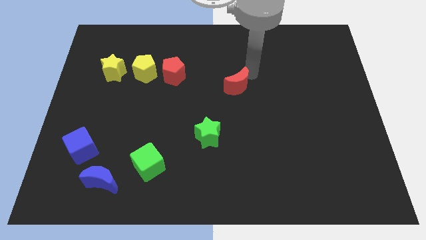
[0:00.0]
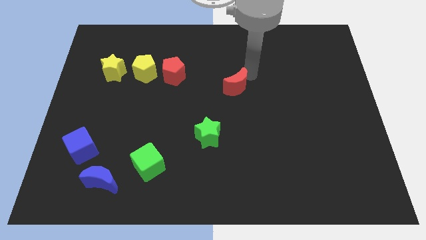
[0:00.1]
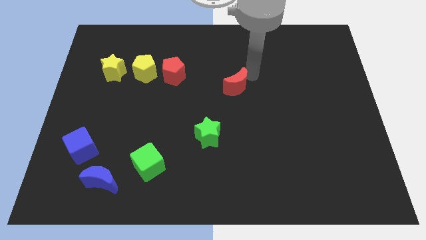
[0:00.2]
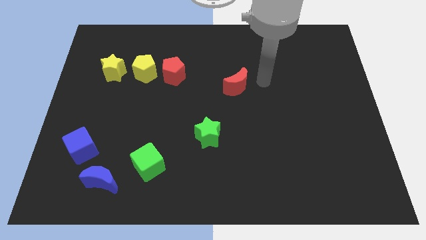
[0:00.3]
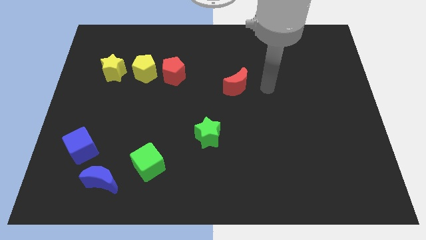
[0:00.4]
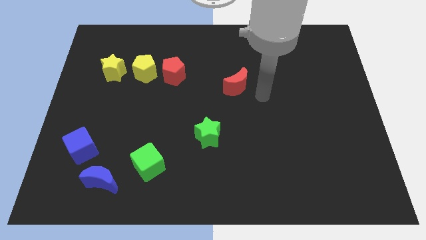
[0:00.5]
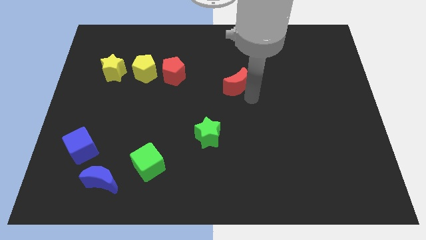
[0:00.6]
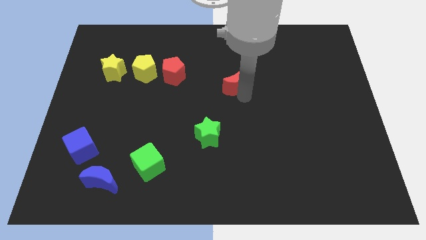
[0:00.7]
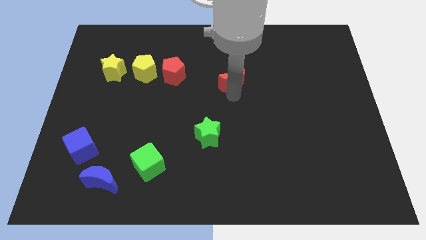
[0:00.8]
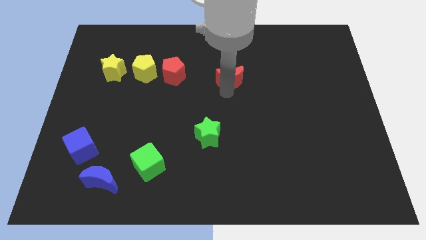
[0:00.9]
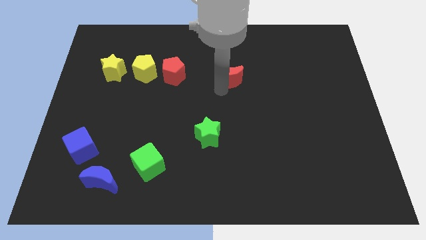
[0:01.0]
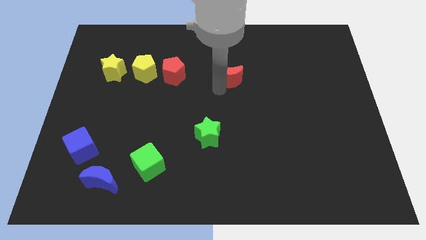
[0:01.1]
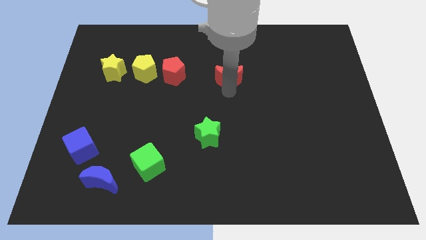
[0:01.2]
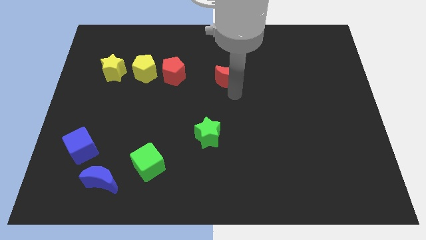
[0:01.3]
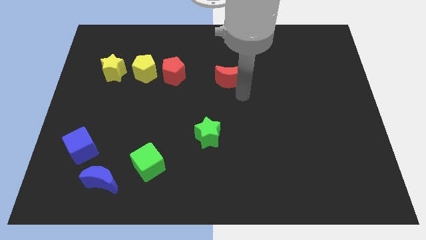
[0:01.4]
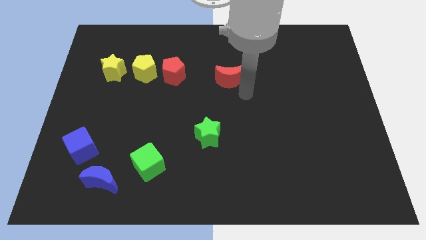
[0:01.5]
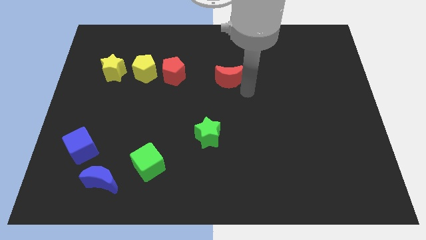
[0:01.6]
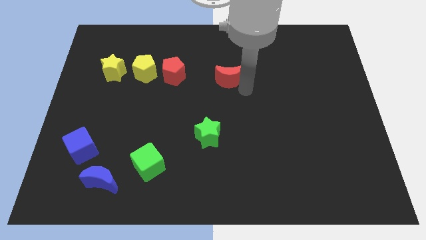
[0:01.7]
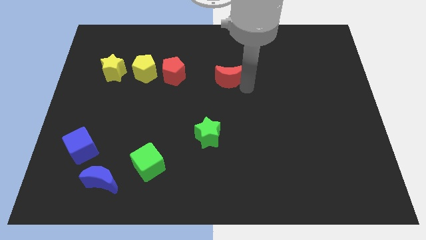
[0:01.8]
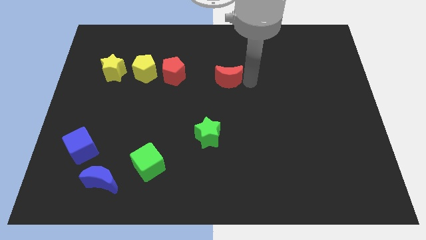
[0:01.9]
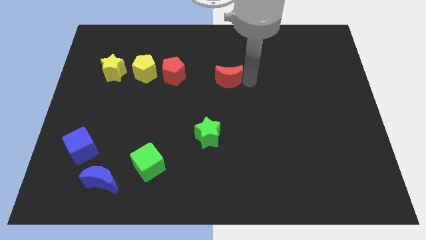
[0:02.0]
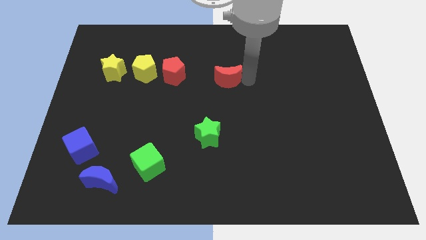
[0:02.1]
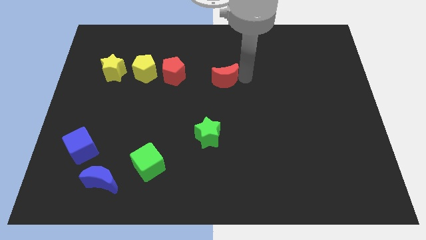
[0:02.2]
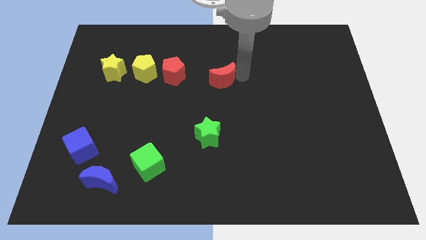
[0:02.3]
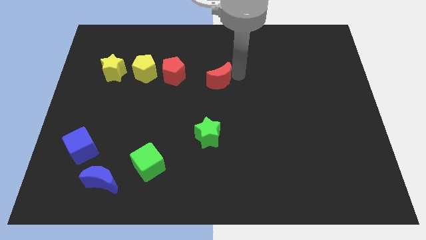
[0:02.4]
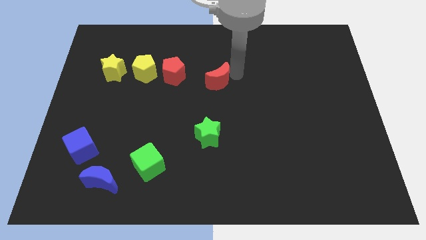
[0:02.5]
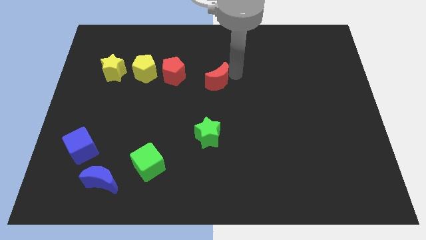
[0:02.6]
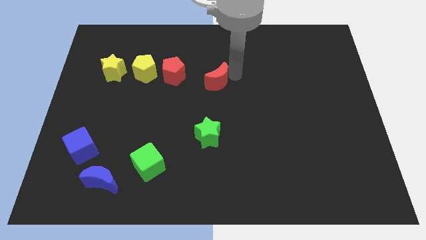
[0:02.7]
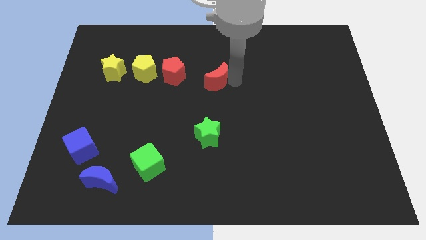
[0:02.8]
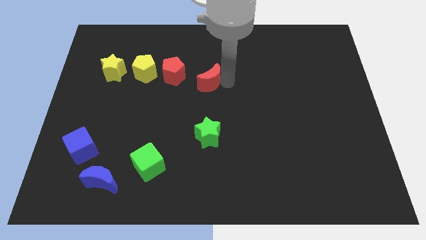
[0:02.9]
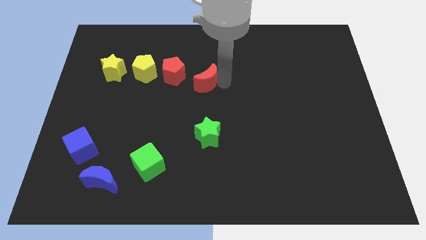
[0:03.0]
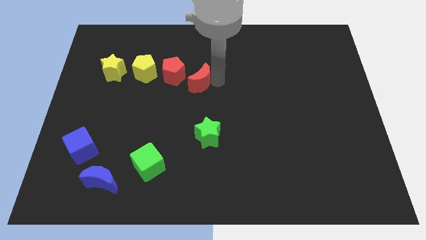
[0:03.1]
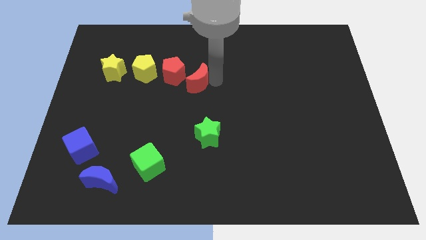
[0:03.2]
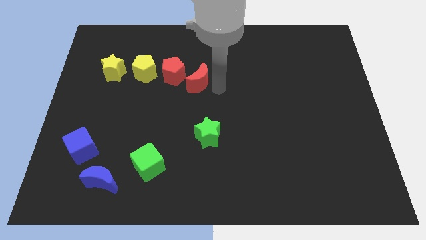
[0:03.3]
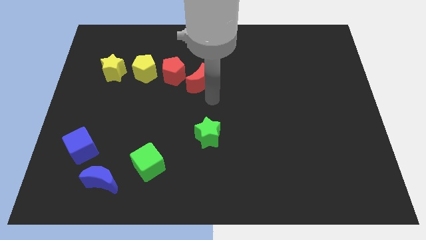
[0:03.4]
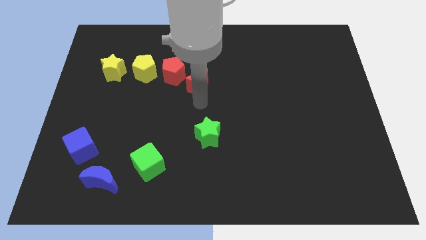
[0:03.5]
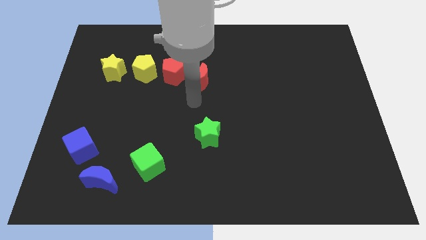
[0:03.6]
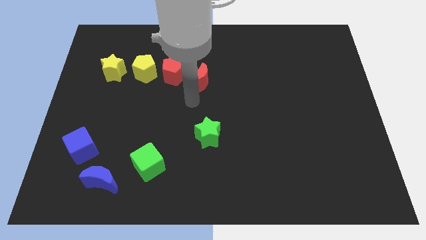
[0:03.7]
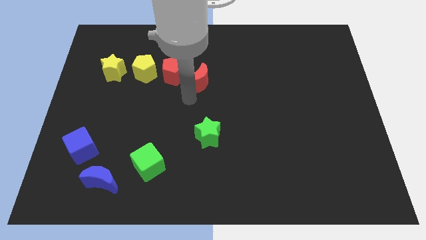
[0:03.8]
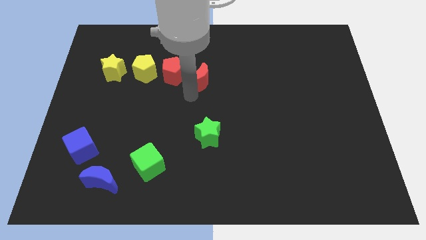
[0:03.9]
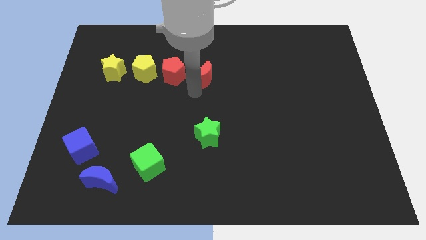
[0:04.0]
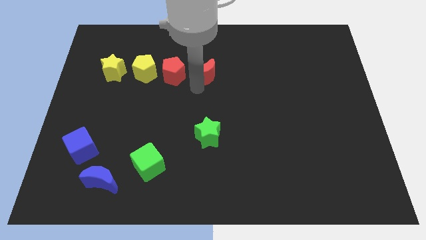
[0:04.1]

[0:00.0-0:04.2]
move red moon right to the red pentagon

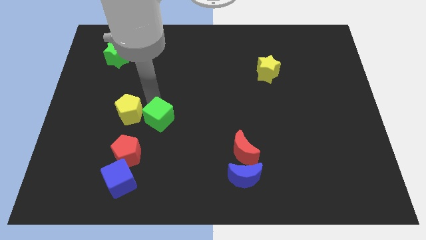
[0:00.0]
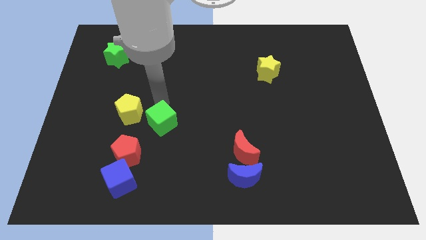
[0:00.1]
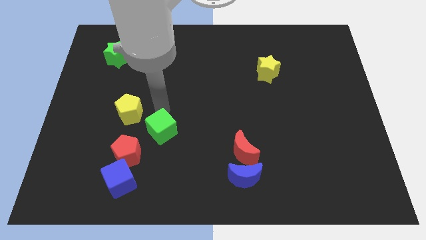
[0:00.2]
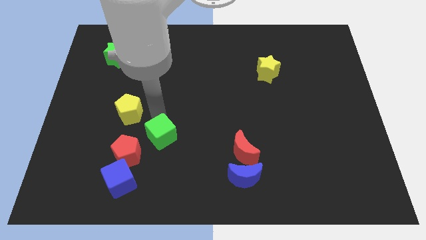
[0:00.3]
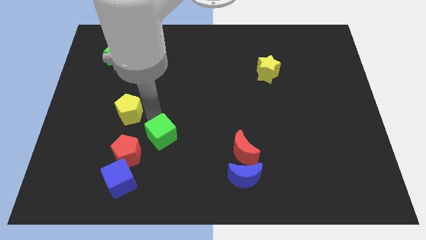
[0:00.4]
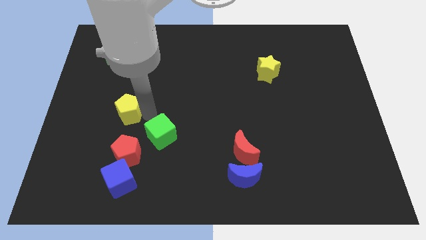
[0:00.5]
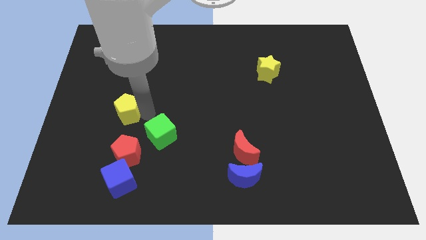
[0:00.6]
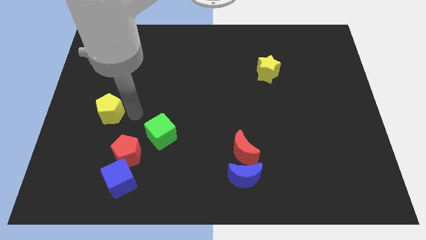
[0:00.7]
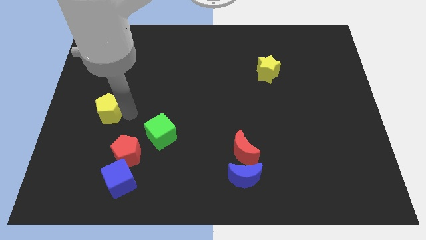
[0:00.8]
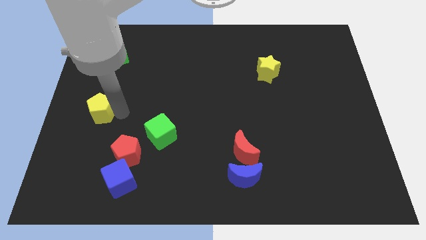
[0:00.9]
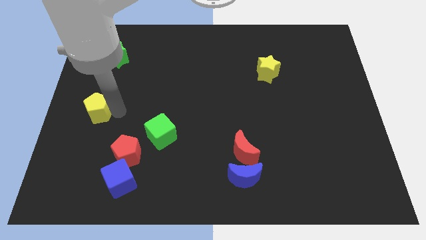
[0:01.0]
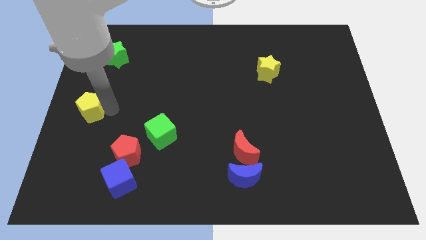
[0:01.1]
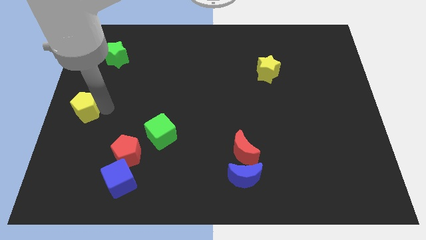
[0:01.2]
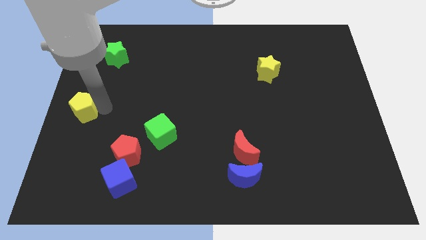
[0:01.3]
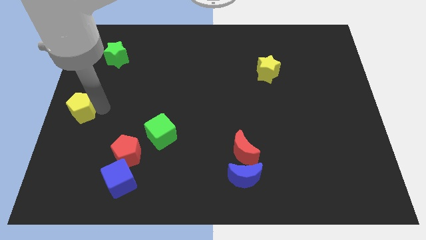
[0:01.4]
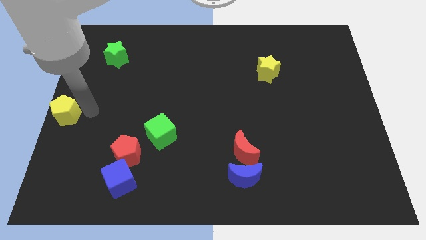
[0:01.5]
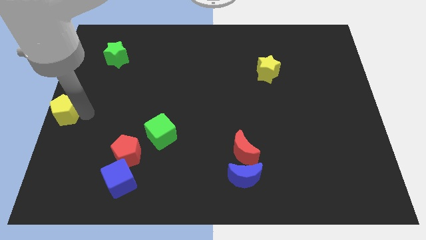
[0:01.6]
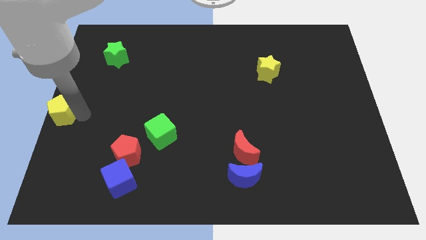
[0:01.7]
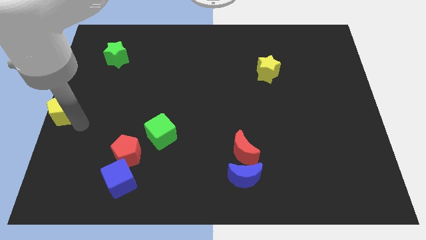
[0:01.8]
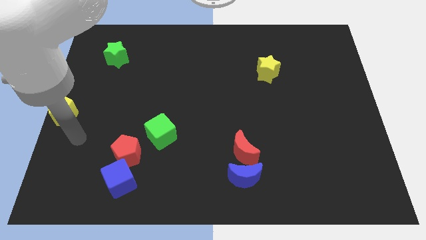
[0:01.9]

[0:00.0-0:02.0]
drag yellow pentagon towards left side of the board

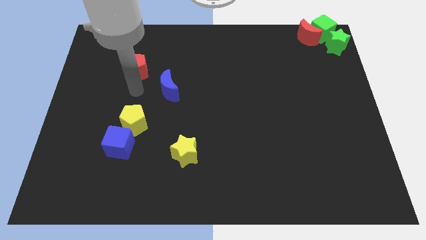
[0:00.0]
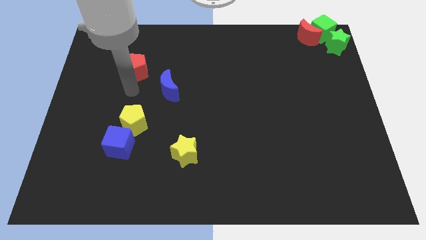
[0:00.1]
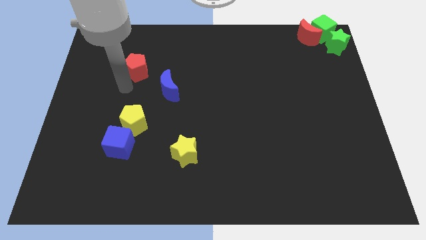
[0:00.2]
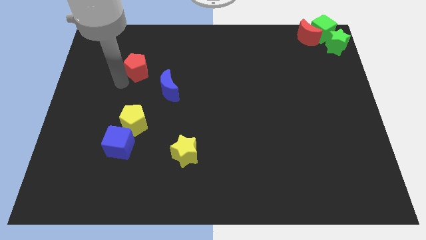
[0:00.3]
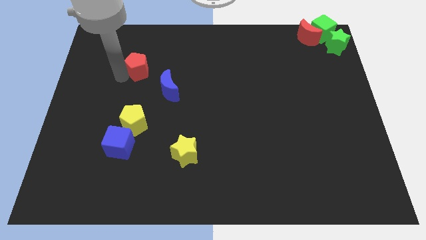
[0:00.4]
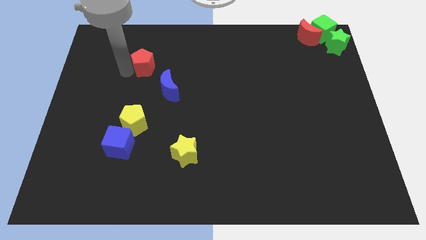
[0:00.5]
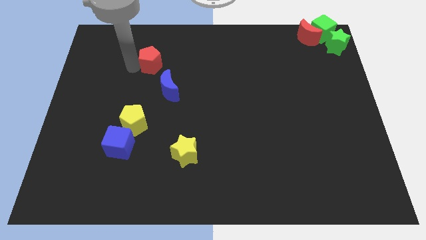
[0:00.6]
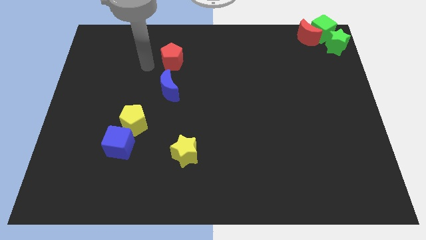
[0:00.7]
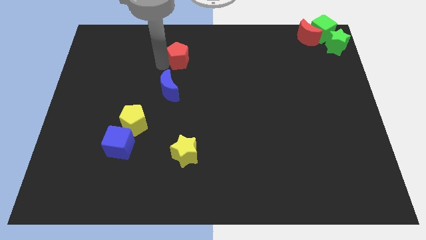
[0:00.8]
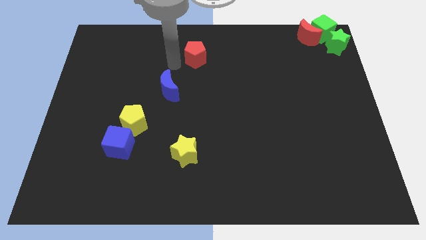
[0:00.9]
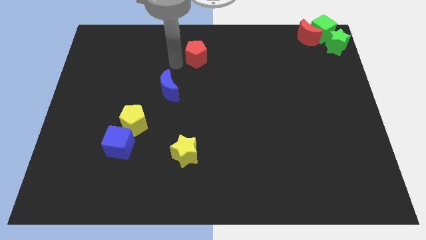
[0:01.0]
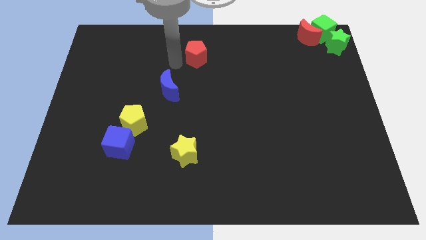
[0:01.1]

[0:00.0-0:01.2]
push the red pentagon to the right of the board

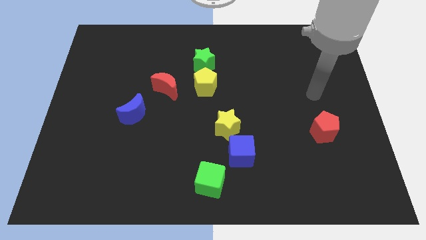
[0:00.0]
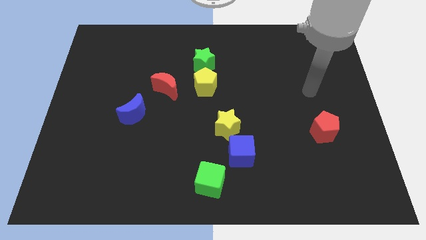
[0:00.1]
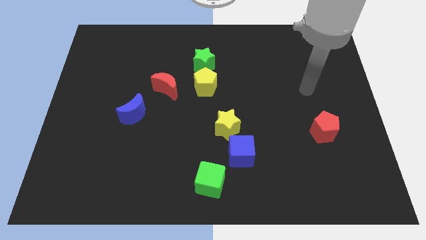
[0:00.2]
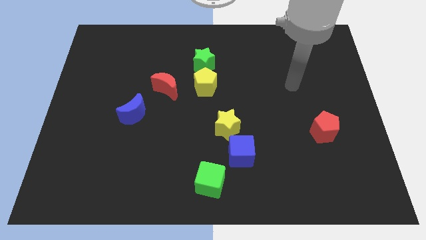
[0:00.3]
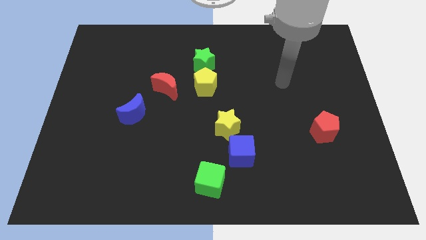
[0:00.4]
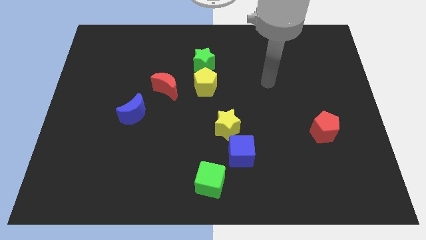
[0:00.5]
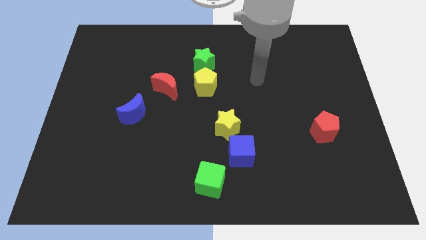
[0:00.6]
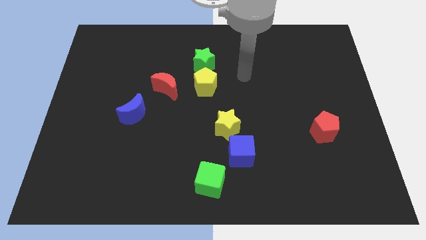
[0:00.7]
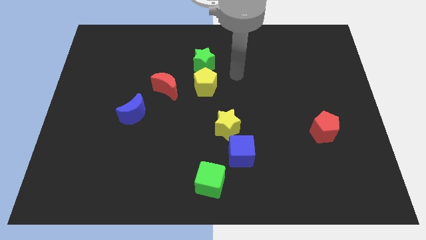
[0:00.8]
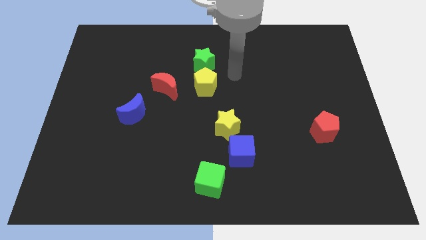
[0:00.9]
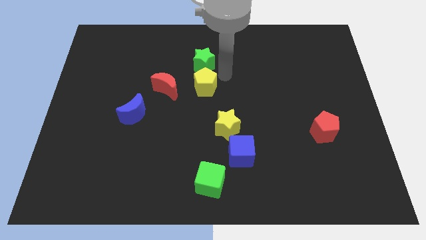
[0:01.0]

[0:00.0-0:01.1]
move robot arm towards green star and yellow pentgaon

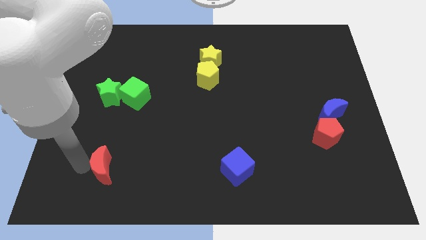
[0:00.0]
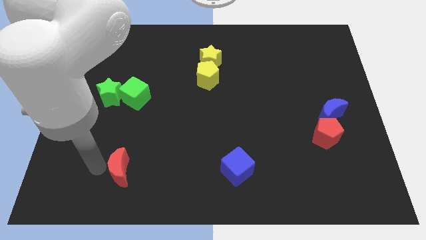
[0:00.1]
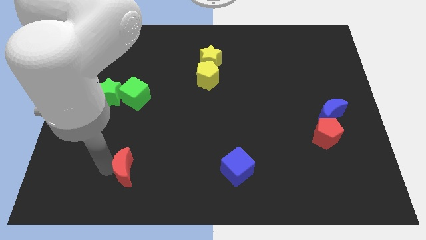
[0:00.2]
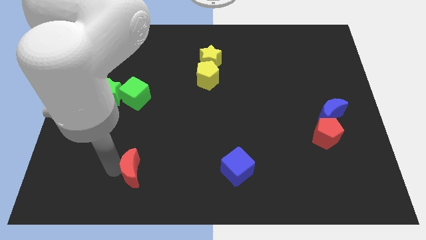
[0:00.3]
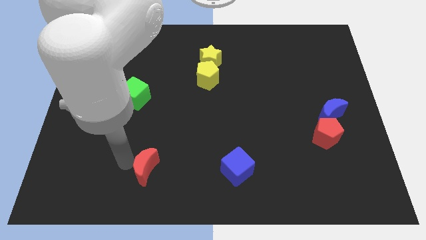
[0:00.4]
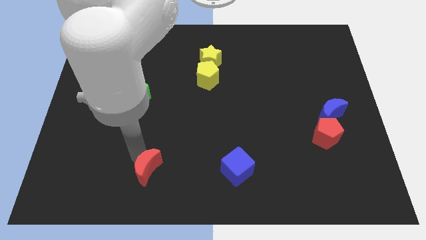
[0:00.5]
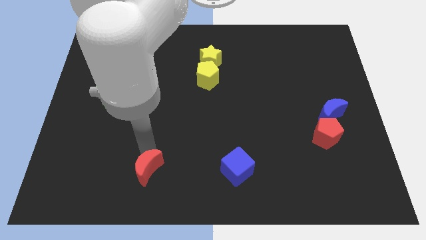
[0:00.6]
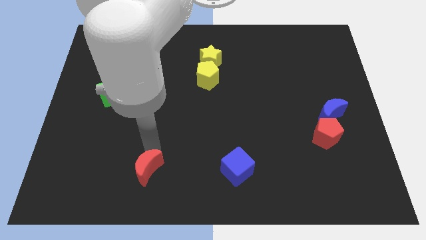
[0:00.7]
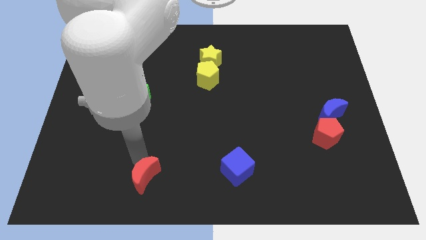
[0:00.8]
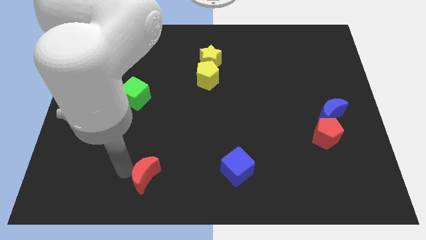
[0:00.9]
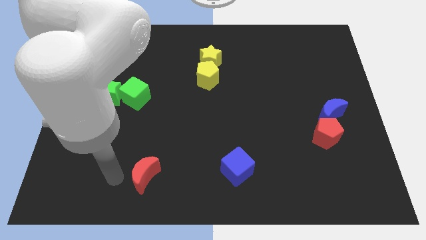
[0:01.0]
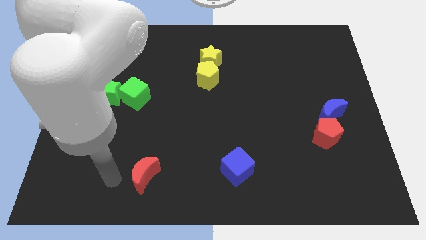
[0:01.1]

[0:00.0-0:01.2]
push the red moon parallel to the blue cube
